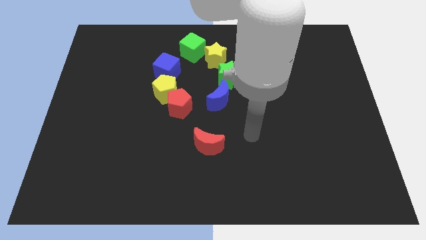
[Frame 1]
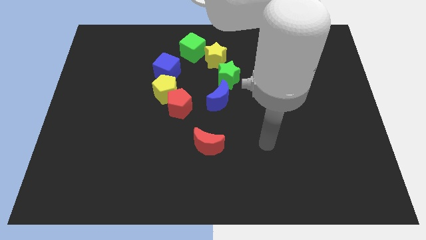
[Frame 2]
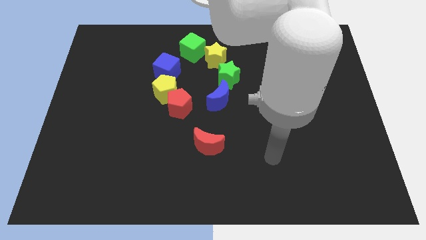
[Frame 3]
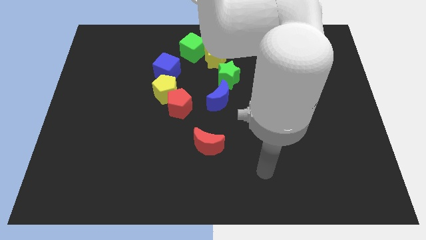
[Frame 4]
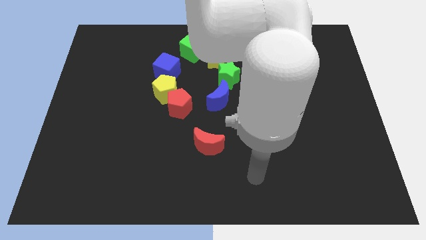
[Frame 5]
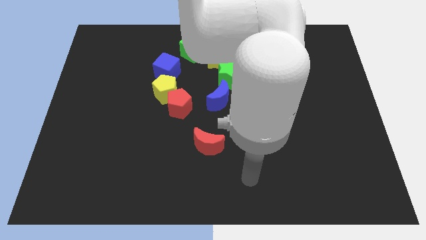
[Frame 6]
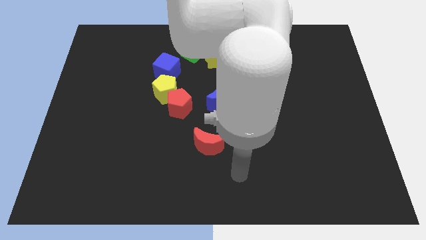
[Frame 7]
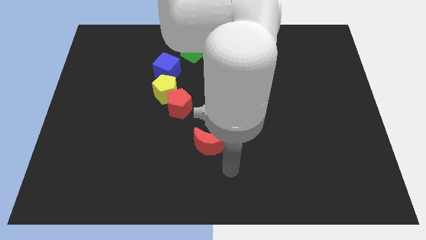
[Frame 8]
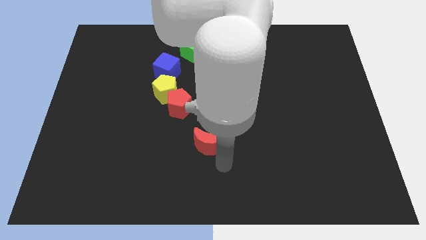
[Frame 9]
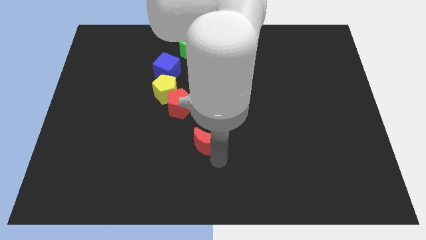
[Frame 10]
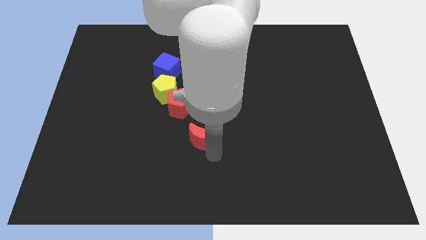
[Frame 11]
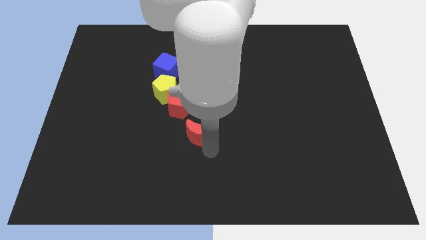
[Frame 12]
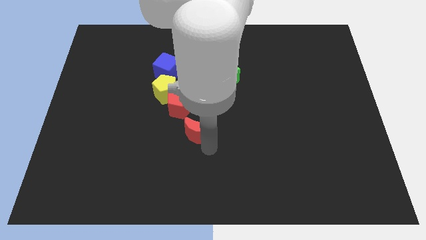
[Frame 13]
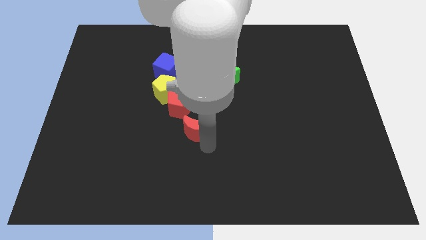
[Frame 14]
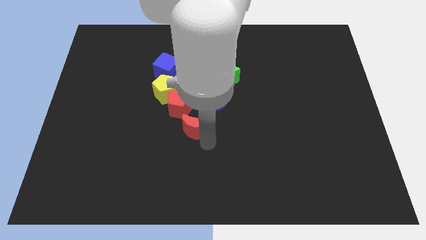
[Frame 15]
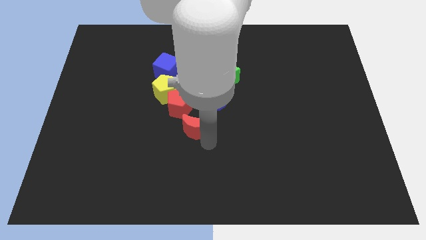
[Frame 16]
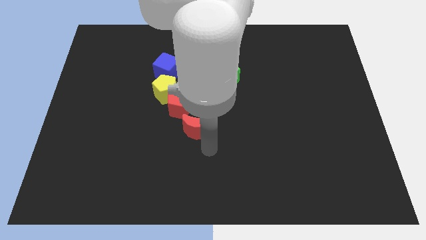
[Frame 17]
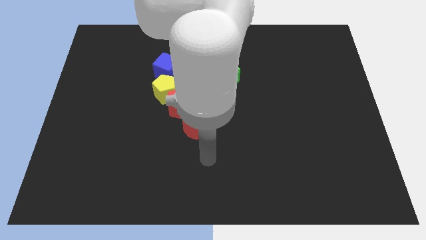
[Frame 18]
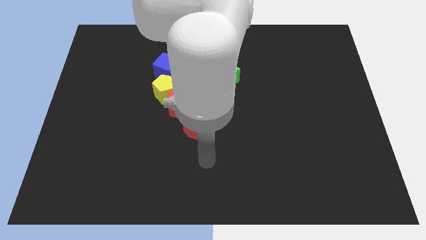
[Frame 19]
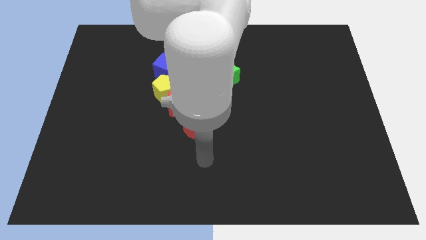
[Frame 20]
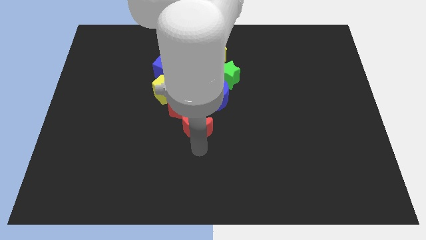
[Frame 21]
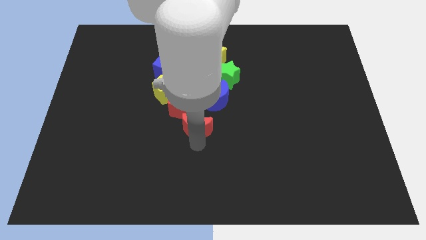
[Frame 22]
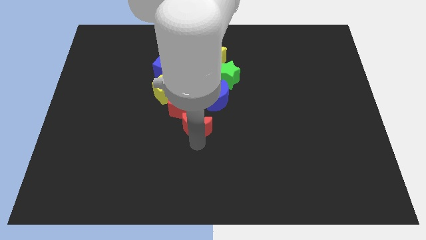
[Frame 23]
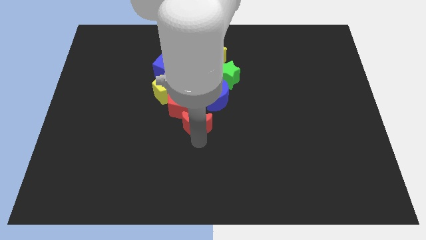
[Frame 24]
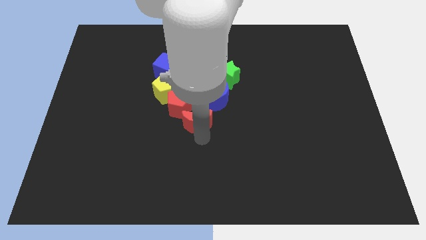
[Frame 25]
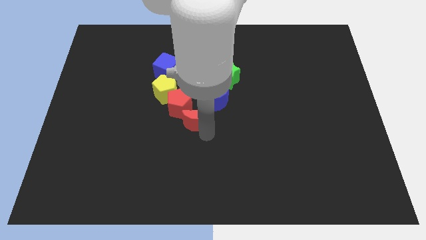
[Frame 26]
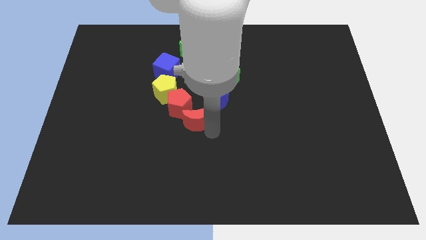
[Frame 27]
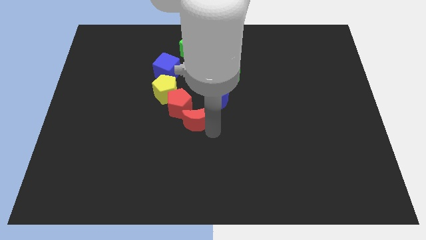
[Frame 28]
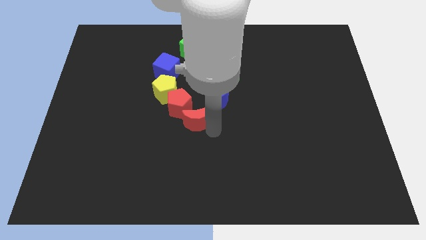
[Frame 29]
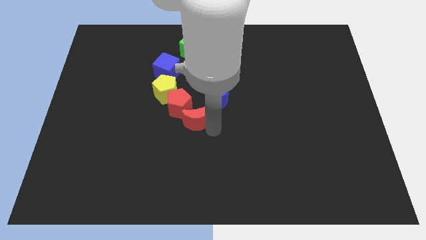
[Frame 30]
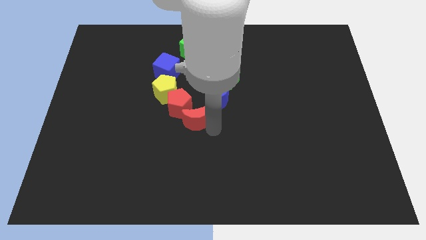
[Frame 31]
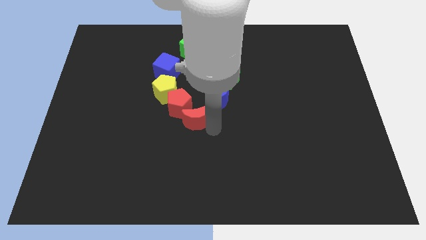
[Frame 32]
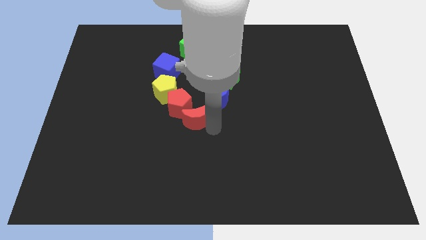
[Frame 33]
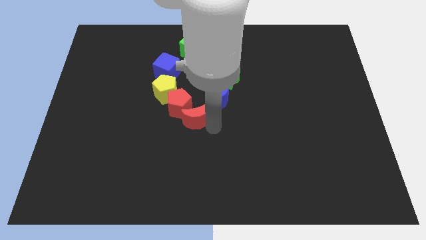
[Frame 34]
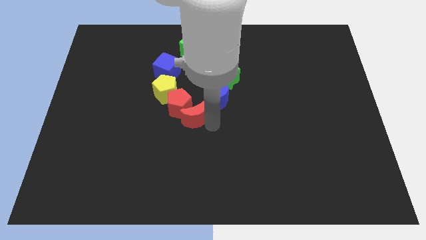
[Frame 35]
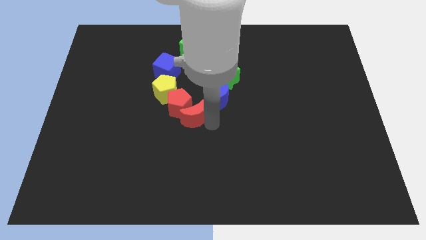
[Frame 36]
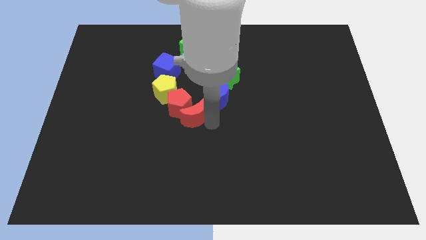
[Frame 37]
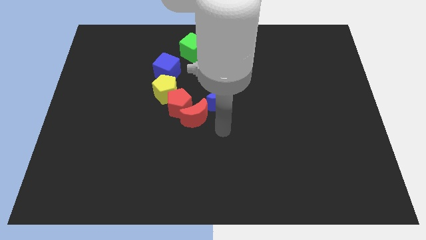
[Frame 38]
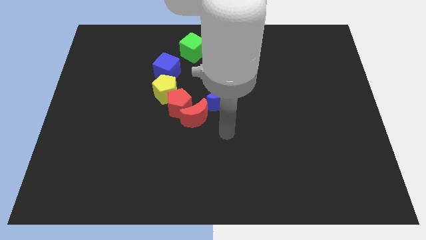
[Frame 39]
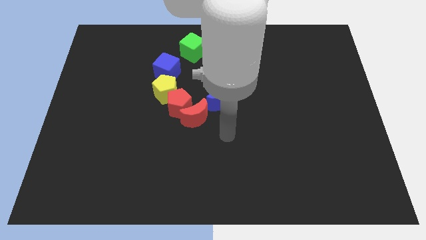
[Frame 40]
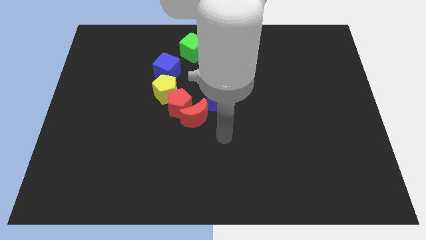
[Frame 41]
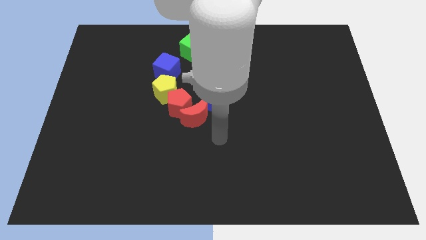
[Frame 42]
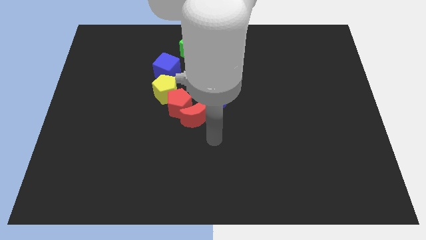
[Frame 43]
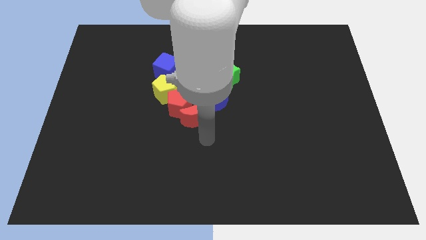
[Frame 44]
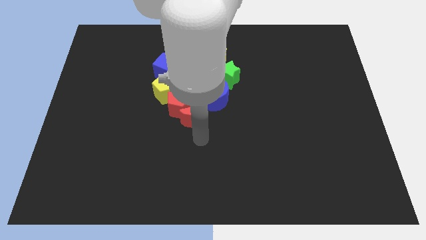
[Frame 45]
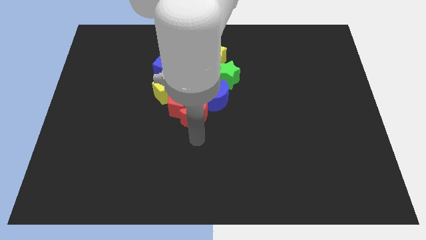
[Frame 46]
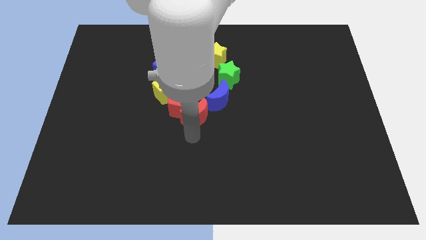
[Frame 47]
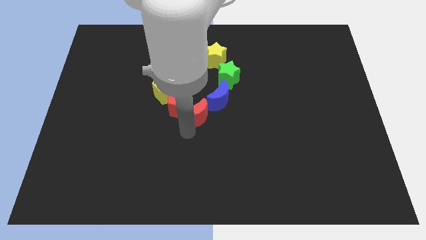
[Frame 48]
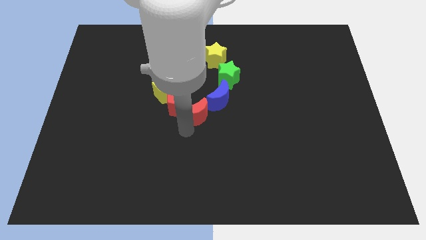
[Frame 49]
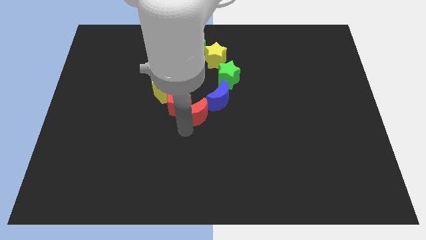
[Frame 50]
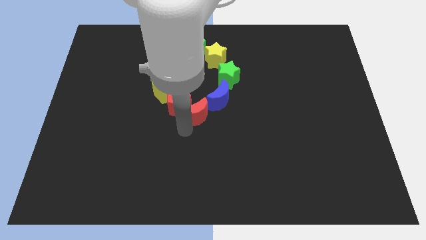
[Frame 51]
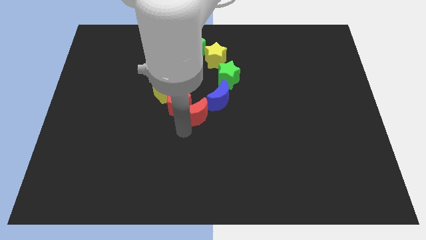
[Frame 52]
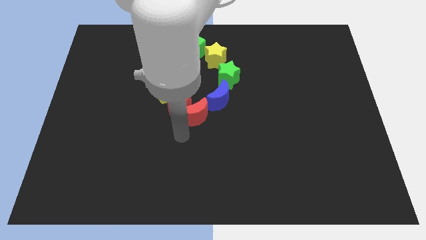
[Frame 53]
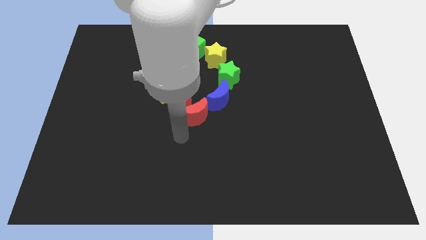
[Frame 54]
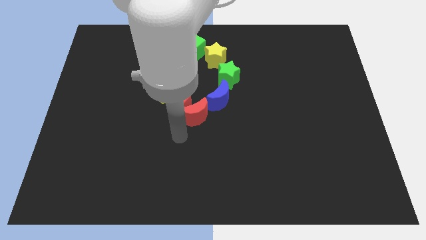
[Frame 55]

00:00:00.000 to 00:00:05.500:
place the red crescent below the red pentagon

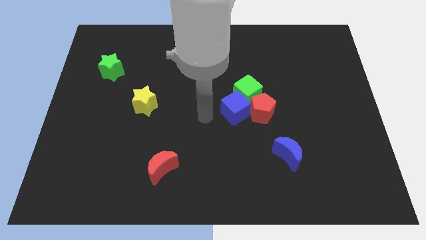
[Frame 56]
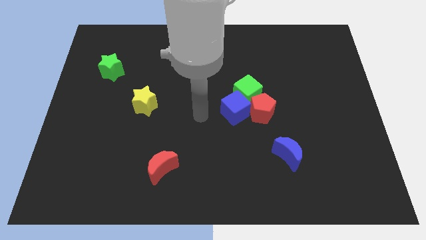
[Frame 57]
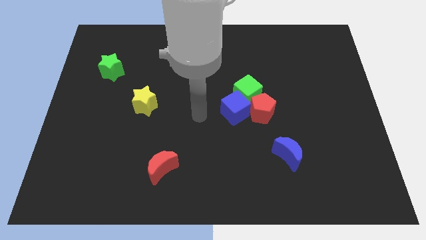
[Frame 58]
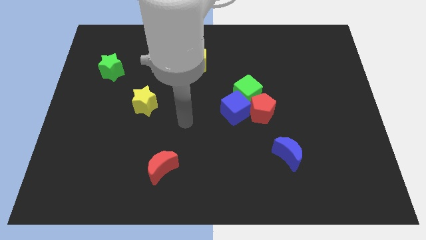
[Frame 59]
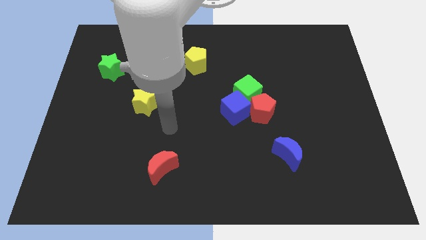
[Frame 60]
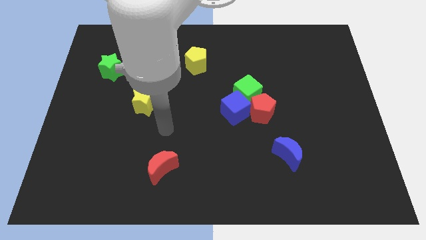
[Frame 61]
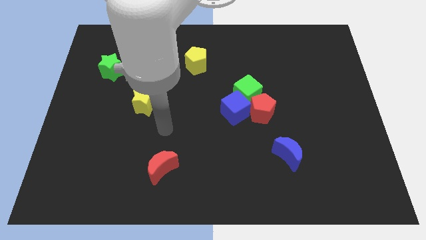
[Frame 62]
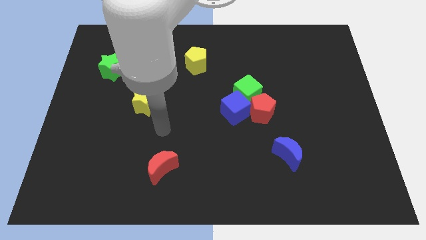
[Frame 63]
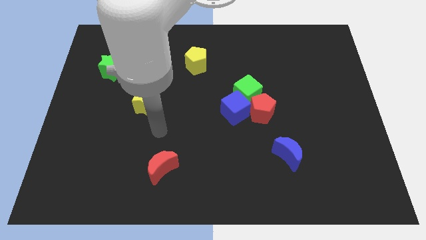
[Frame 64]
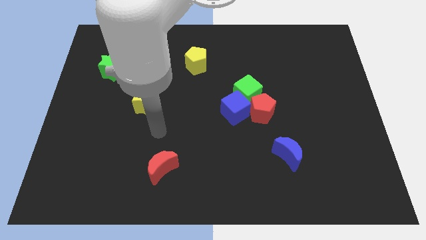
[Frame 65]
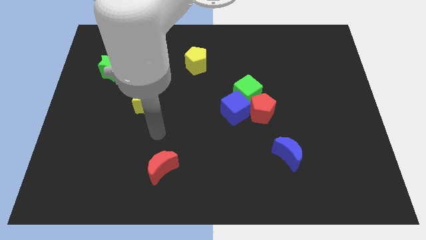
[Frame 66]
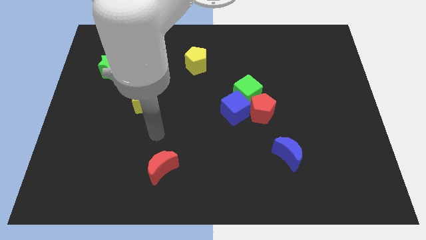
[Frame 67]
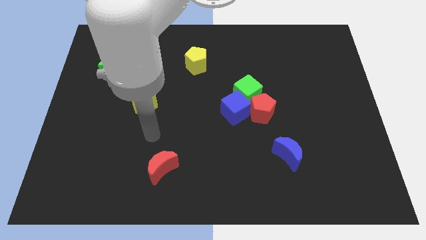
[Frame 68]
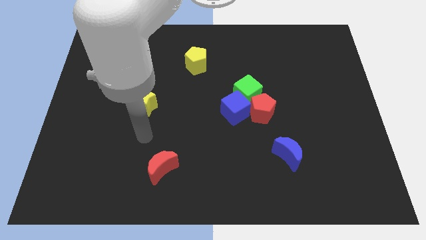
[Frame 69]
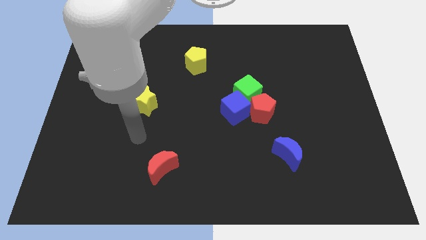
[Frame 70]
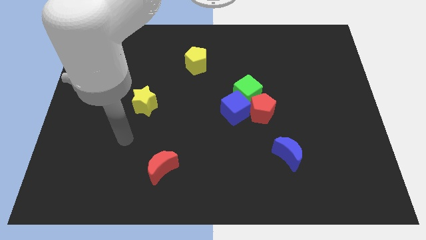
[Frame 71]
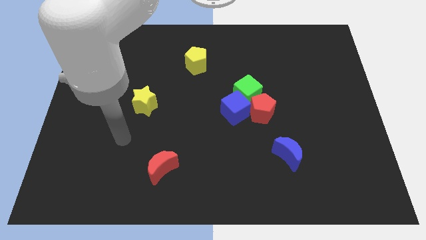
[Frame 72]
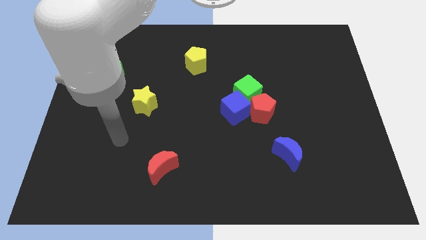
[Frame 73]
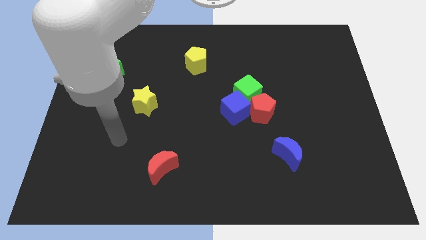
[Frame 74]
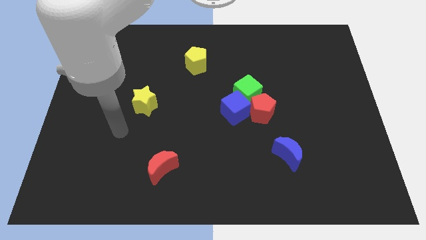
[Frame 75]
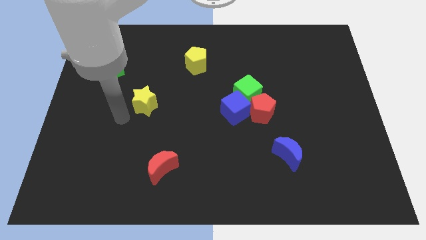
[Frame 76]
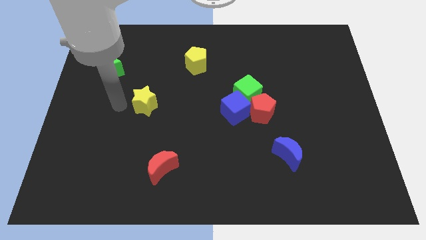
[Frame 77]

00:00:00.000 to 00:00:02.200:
point your hand at the left side of the yellow star

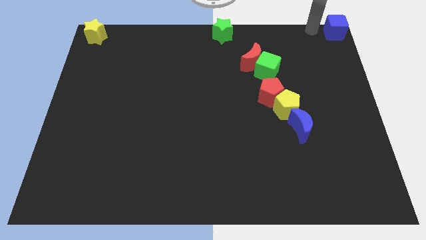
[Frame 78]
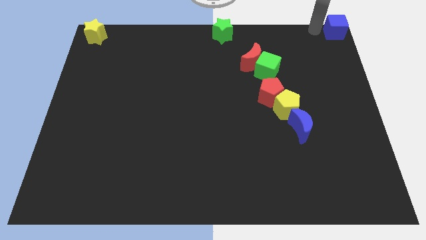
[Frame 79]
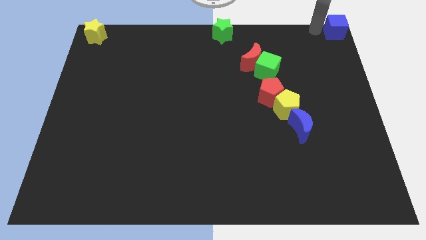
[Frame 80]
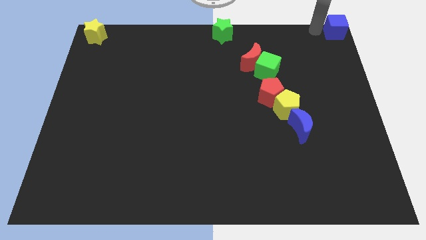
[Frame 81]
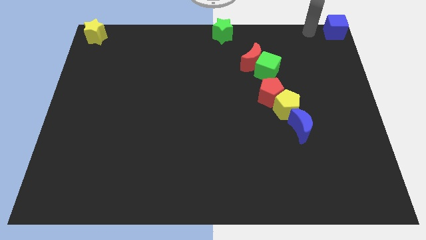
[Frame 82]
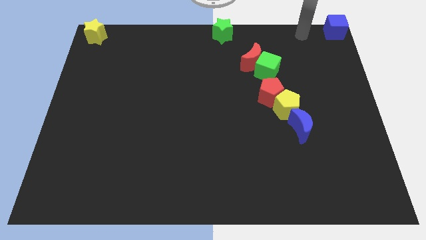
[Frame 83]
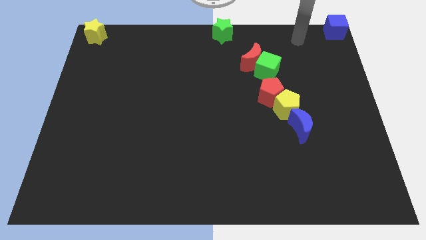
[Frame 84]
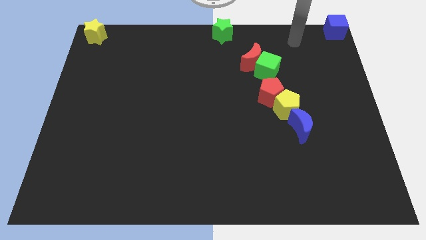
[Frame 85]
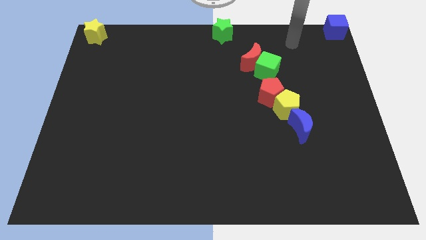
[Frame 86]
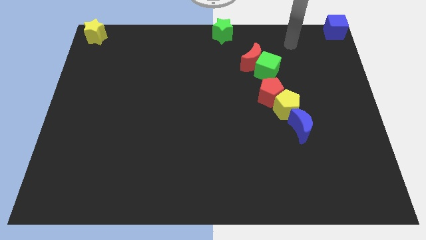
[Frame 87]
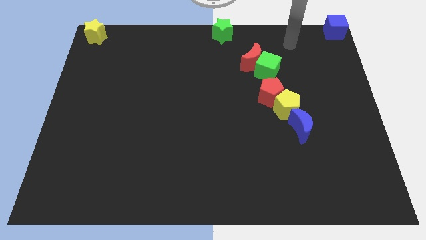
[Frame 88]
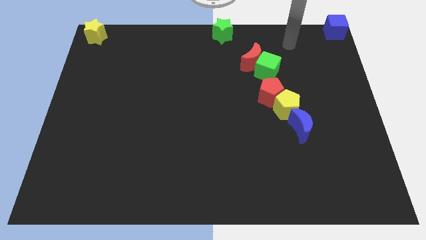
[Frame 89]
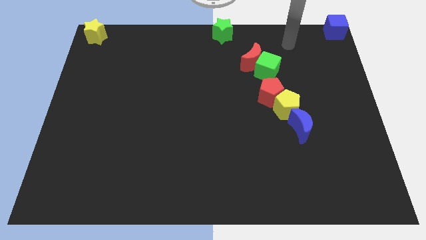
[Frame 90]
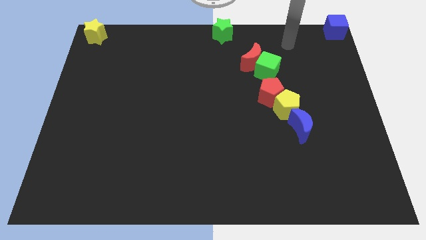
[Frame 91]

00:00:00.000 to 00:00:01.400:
push the blue cube at the top right corner
